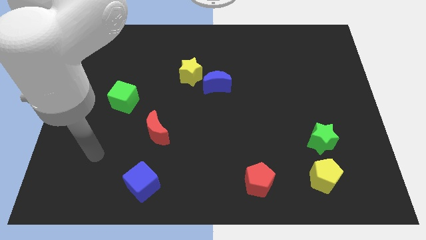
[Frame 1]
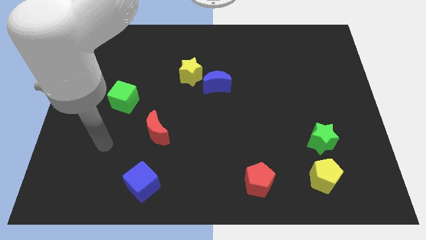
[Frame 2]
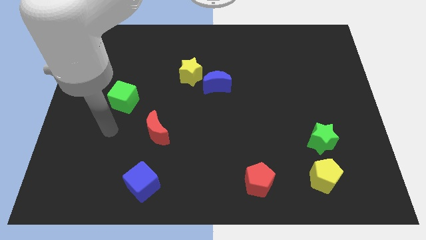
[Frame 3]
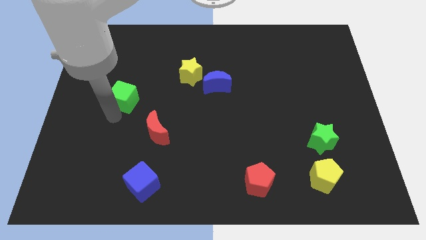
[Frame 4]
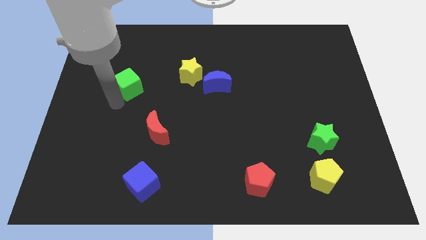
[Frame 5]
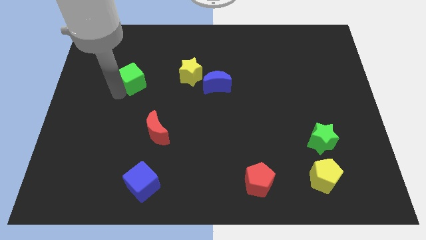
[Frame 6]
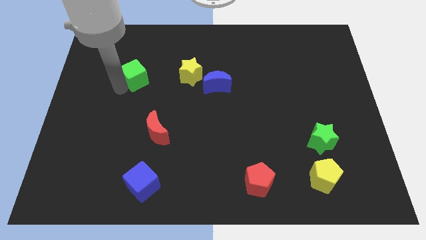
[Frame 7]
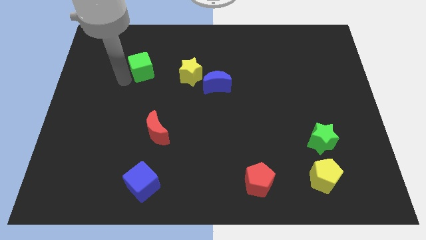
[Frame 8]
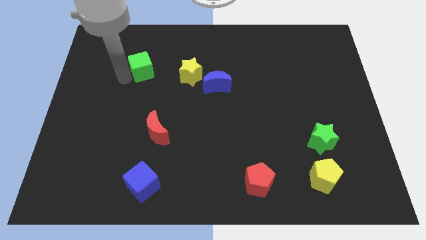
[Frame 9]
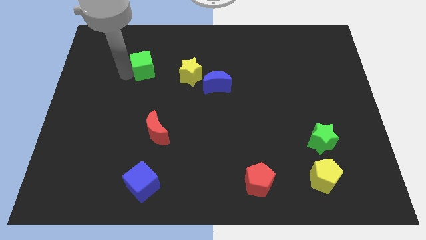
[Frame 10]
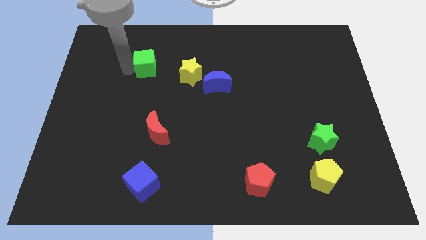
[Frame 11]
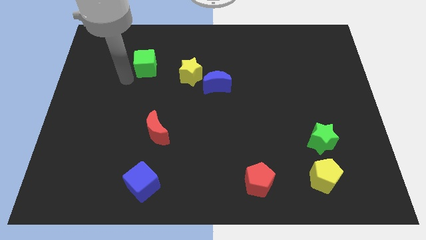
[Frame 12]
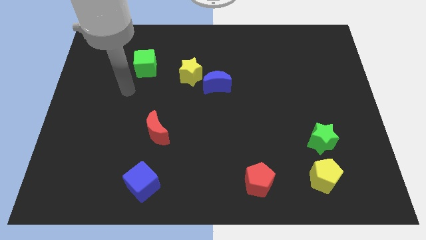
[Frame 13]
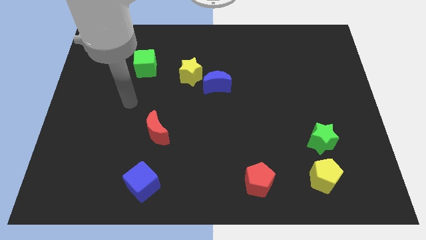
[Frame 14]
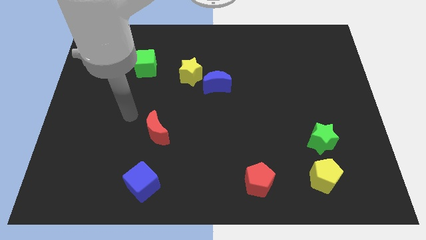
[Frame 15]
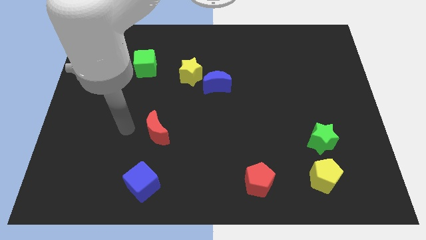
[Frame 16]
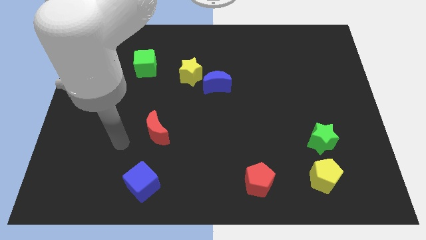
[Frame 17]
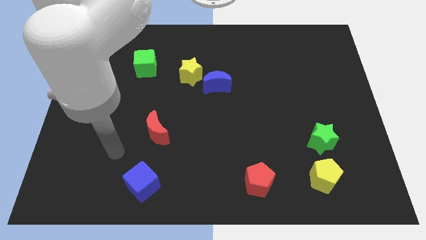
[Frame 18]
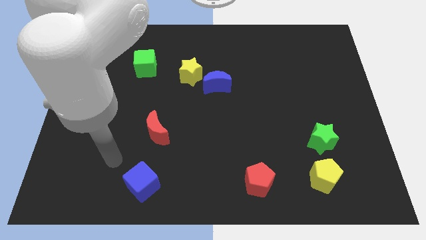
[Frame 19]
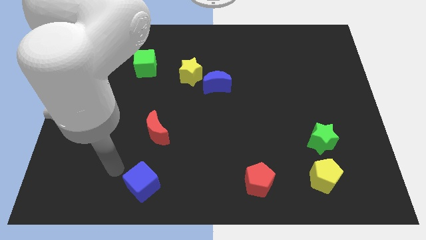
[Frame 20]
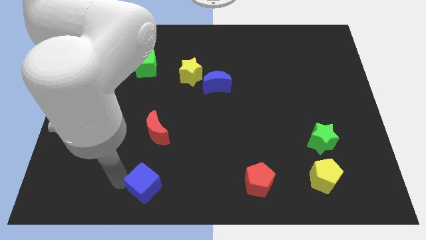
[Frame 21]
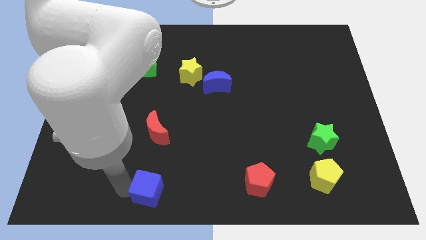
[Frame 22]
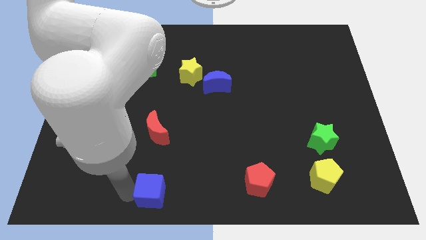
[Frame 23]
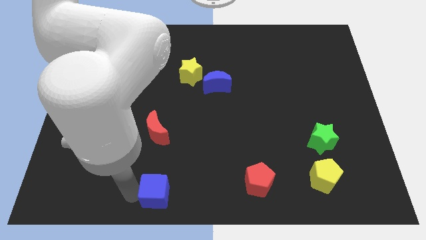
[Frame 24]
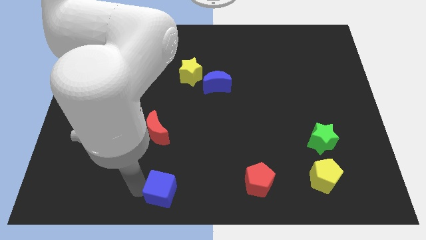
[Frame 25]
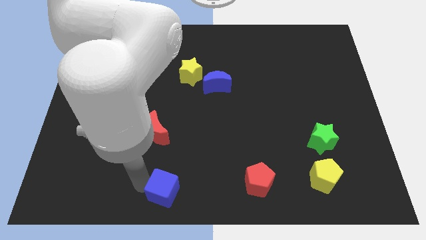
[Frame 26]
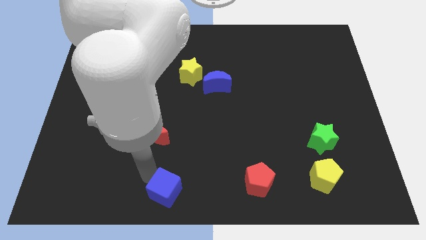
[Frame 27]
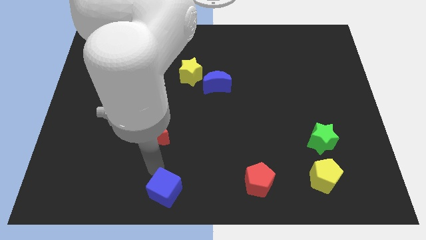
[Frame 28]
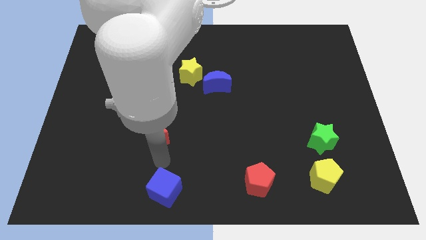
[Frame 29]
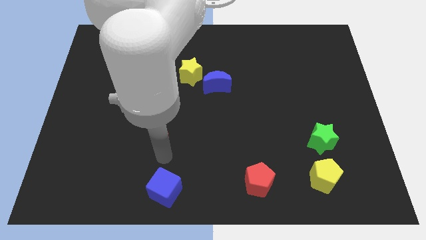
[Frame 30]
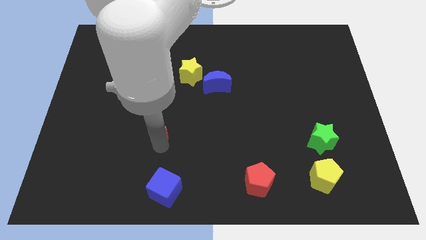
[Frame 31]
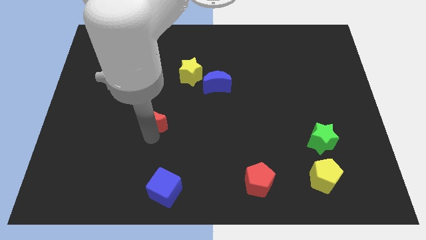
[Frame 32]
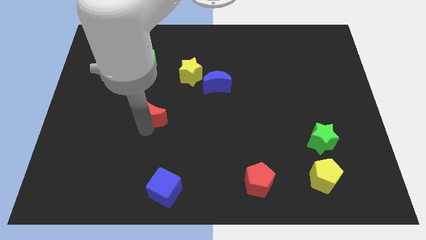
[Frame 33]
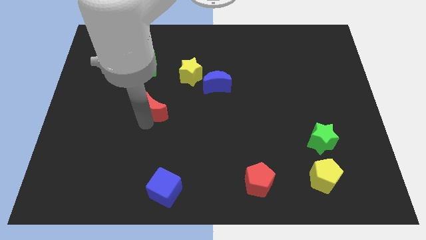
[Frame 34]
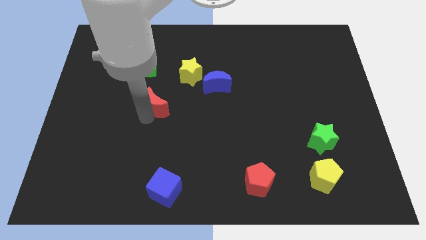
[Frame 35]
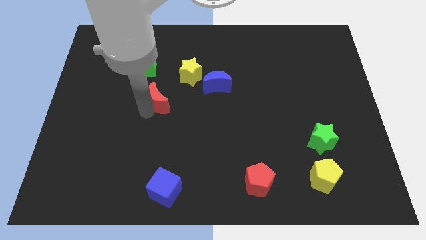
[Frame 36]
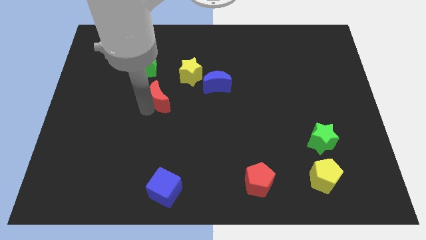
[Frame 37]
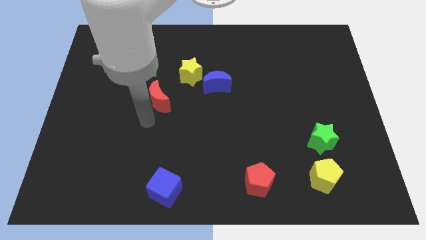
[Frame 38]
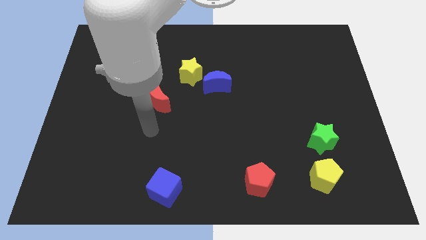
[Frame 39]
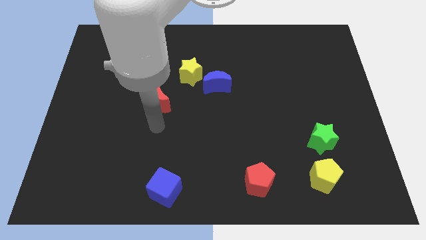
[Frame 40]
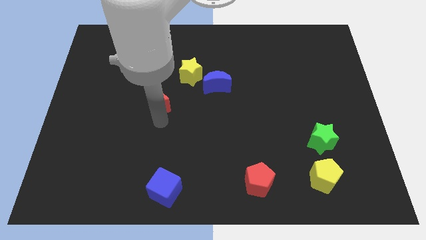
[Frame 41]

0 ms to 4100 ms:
place the red crescent on the bottom side of the green cube

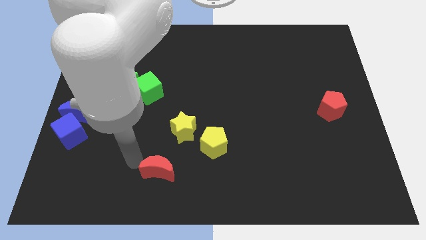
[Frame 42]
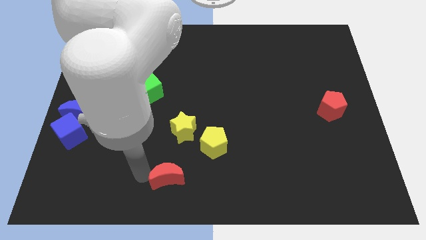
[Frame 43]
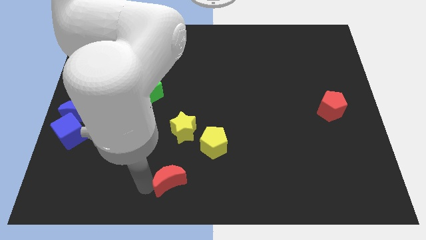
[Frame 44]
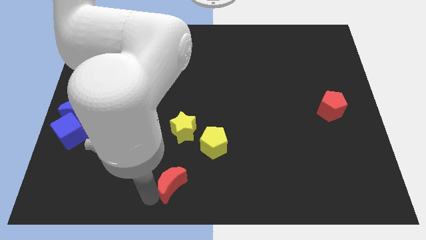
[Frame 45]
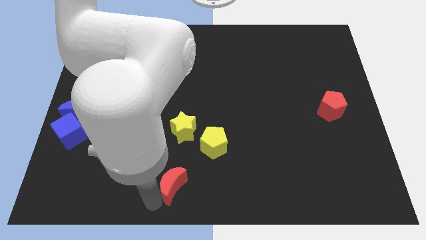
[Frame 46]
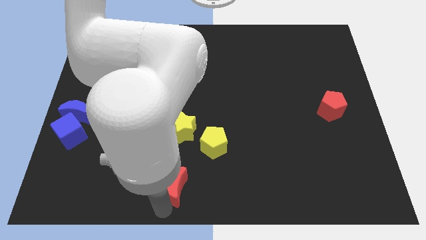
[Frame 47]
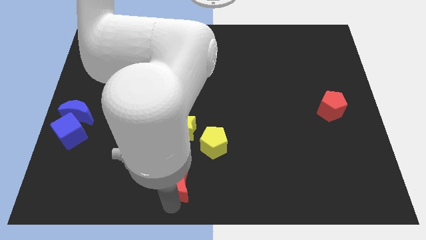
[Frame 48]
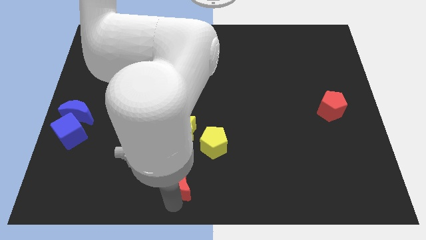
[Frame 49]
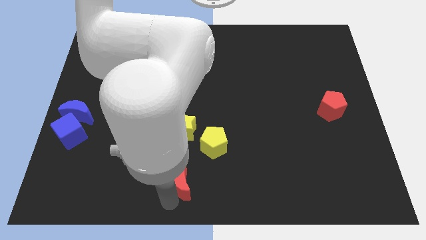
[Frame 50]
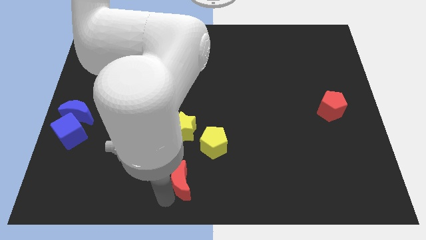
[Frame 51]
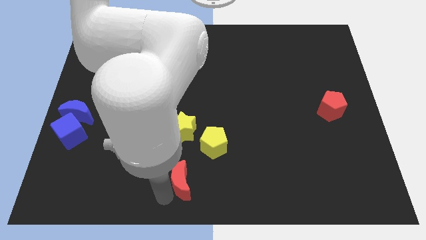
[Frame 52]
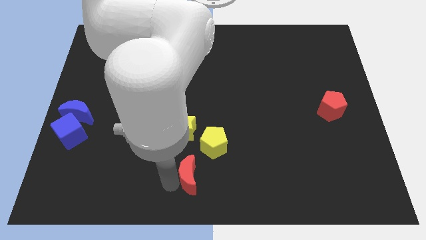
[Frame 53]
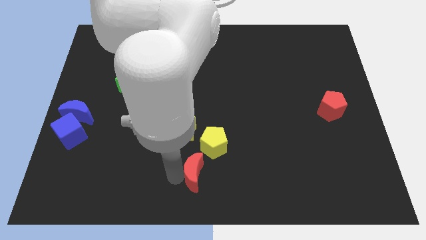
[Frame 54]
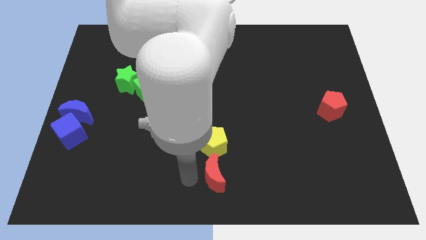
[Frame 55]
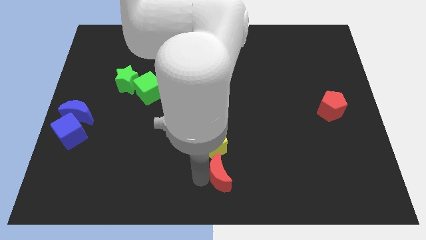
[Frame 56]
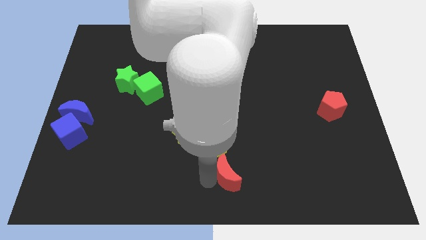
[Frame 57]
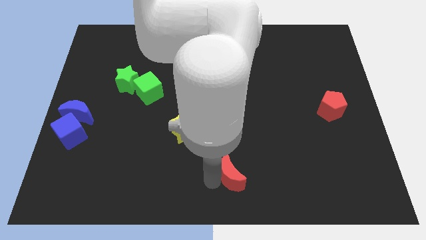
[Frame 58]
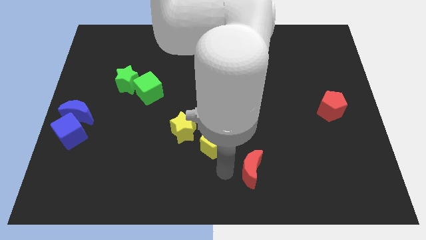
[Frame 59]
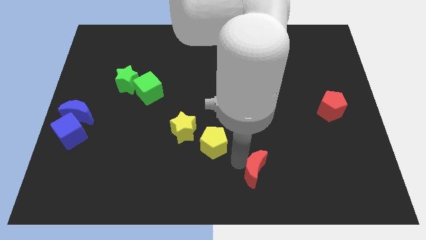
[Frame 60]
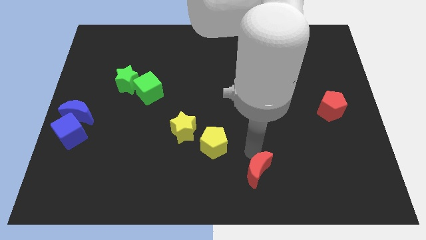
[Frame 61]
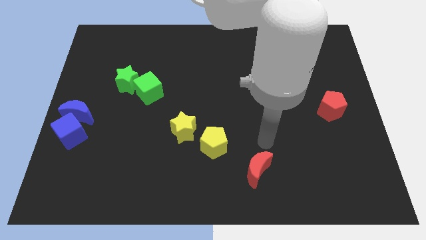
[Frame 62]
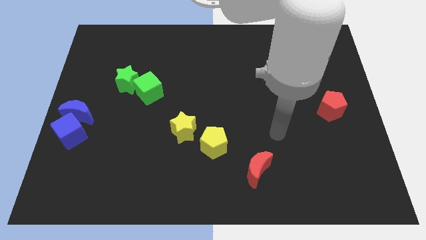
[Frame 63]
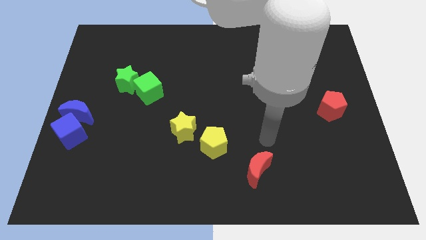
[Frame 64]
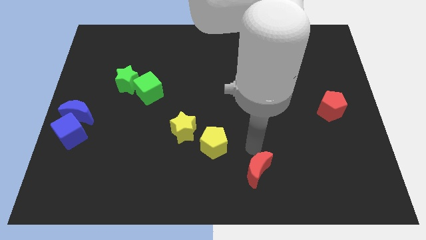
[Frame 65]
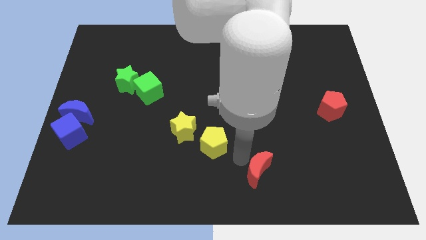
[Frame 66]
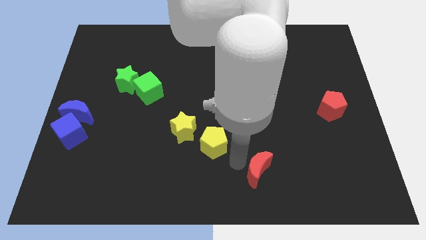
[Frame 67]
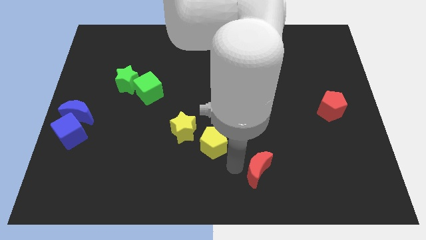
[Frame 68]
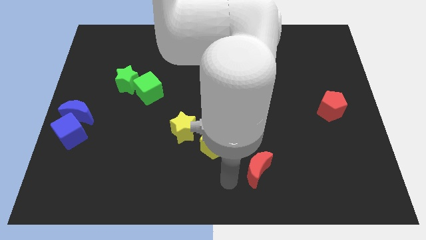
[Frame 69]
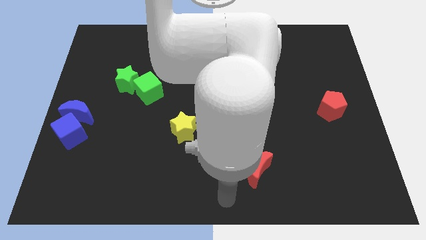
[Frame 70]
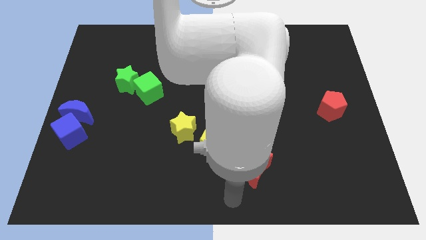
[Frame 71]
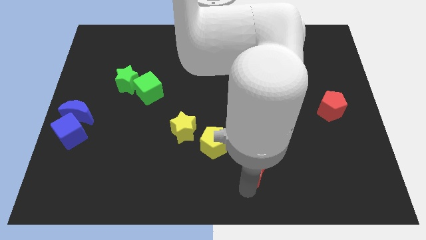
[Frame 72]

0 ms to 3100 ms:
move the red crescent to the bottom right of the yellow pentagon

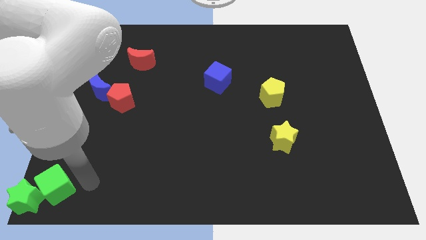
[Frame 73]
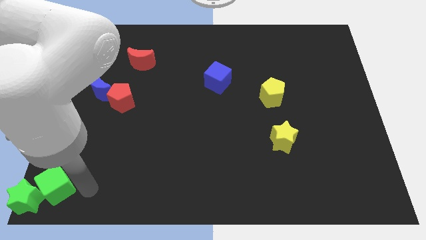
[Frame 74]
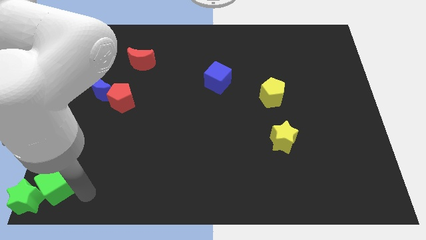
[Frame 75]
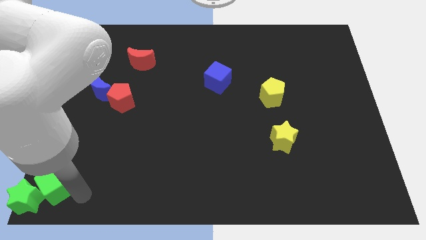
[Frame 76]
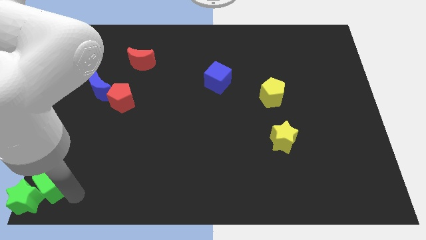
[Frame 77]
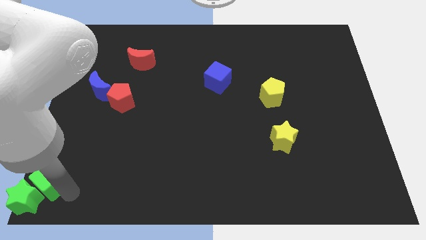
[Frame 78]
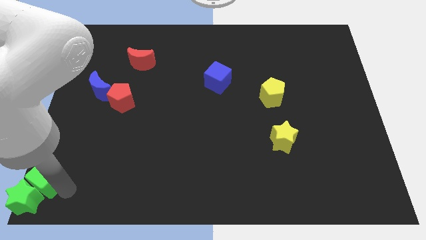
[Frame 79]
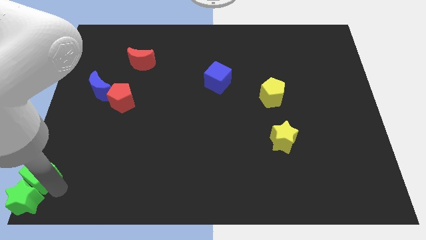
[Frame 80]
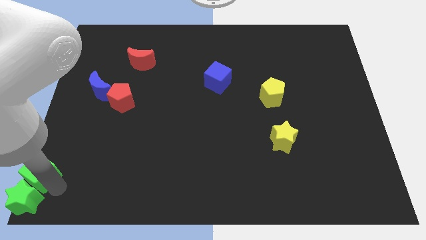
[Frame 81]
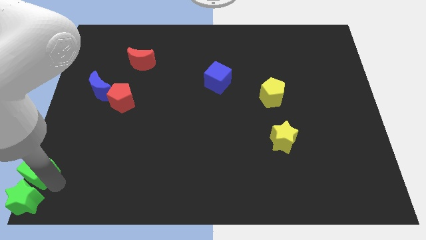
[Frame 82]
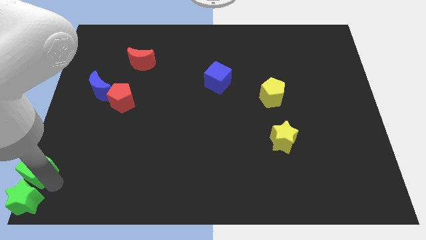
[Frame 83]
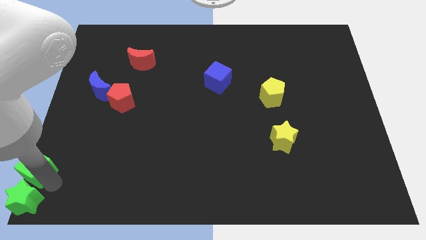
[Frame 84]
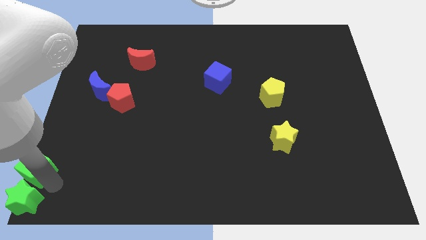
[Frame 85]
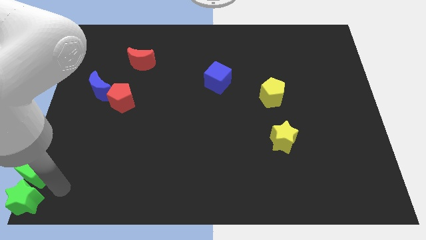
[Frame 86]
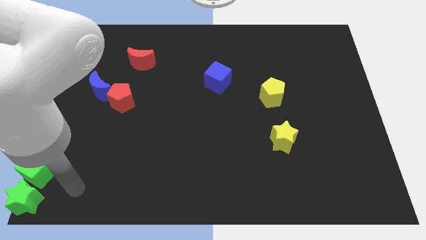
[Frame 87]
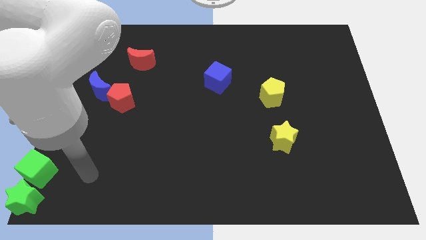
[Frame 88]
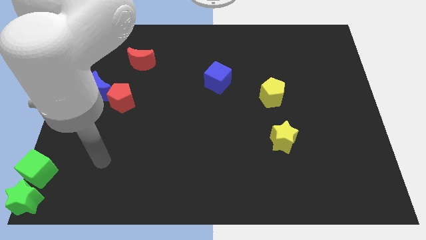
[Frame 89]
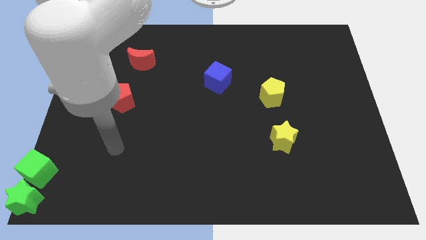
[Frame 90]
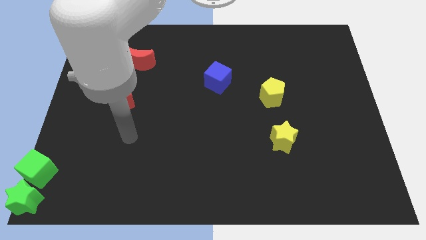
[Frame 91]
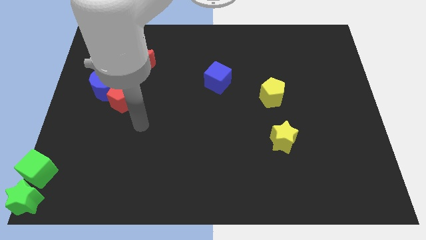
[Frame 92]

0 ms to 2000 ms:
move the green cube to the top of the green star
